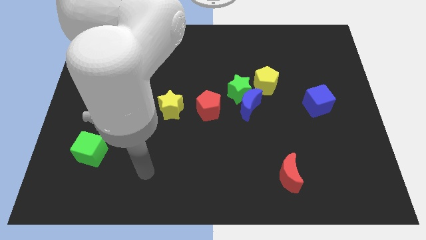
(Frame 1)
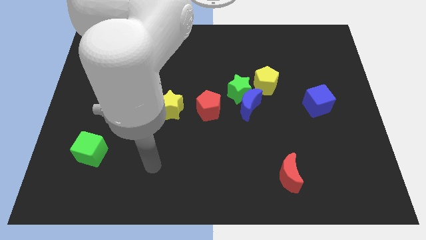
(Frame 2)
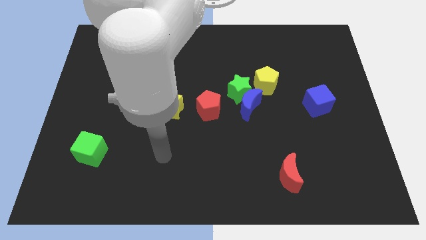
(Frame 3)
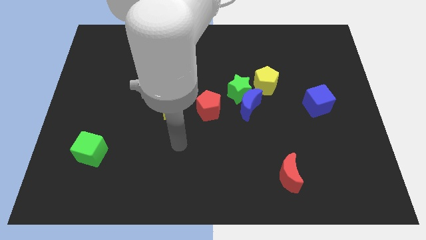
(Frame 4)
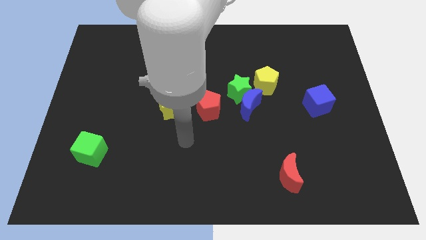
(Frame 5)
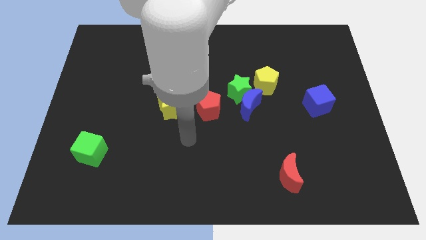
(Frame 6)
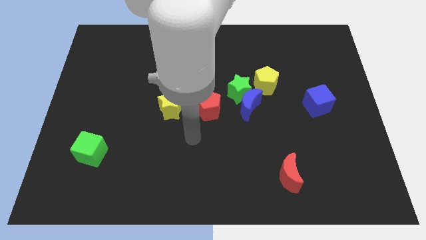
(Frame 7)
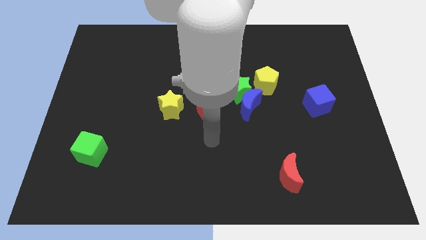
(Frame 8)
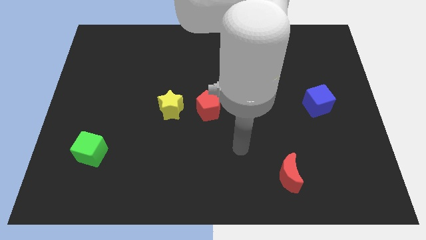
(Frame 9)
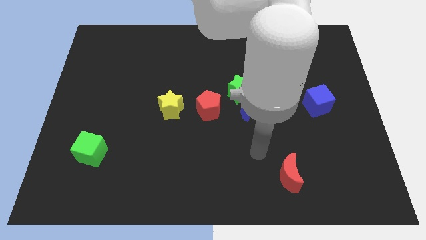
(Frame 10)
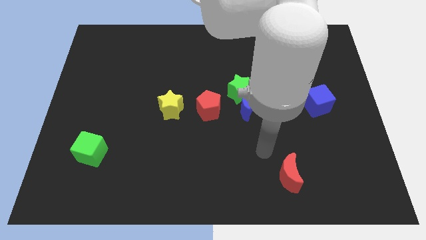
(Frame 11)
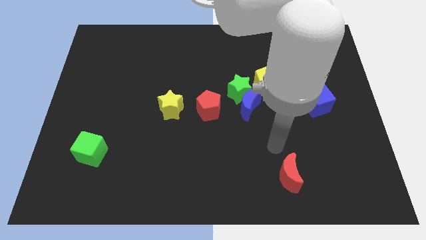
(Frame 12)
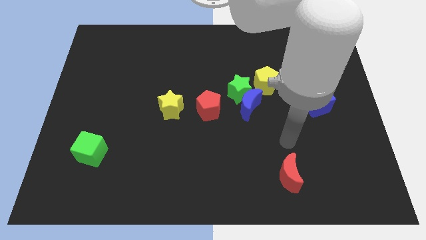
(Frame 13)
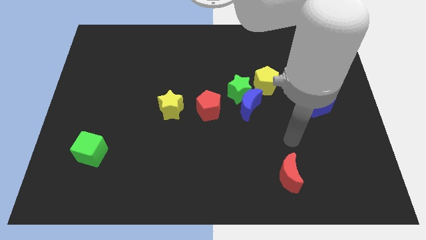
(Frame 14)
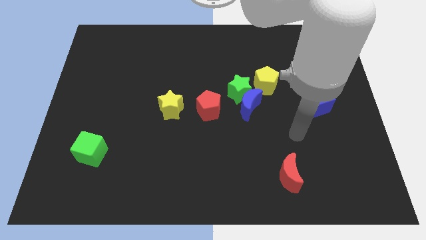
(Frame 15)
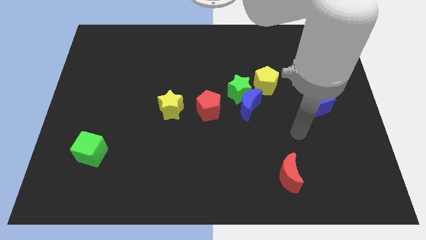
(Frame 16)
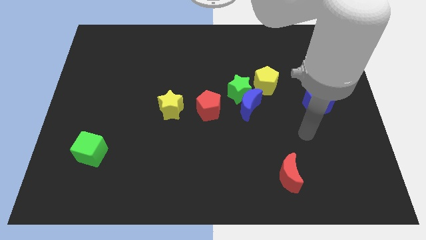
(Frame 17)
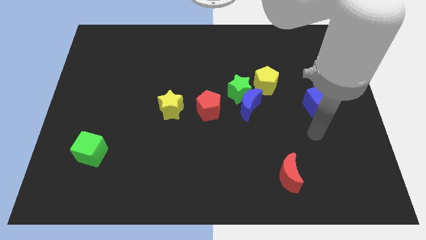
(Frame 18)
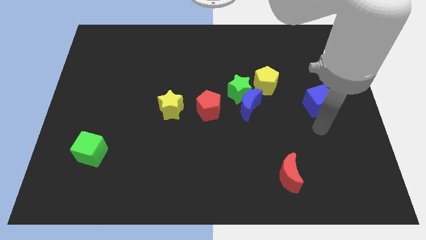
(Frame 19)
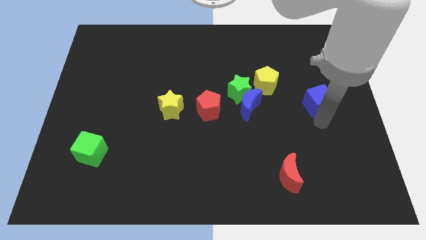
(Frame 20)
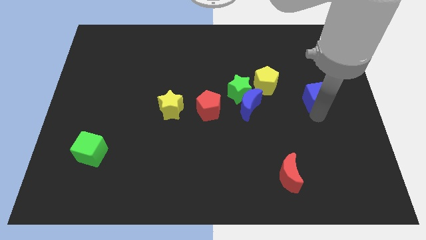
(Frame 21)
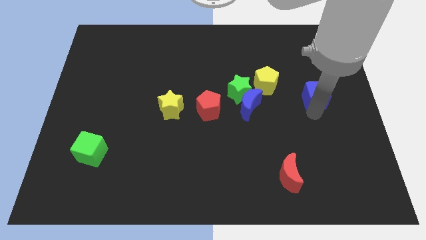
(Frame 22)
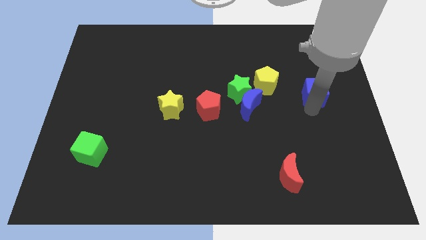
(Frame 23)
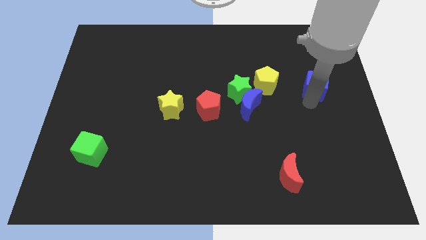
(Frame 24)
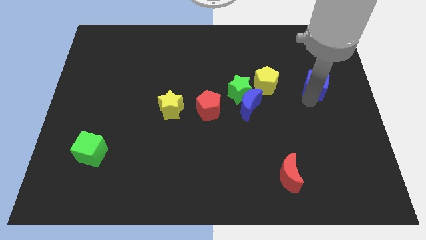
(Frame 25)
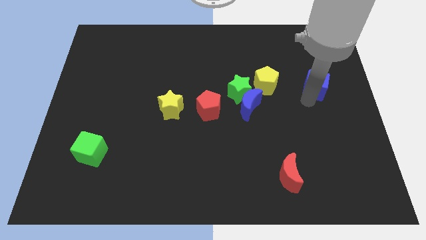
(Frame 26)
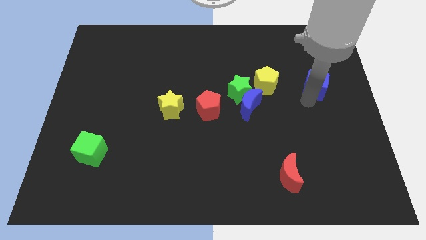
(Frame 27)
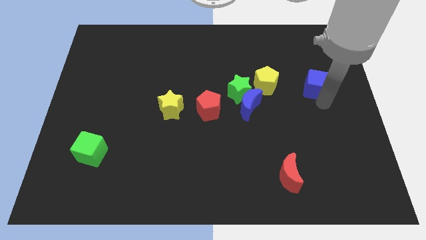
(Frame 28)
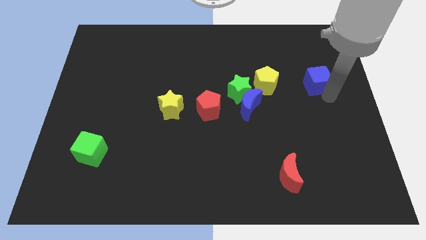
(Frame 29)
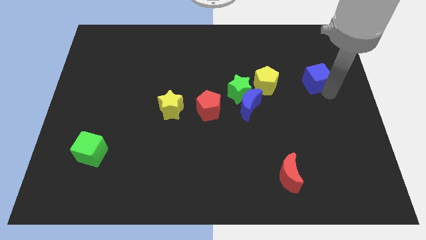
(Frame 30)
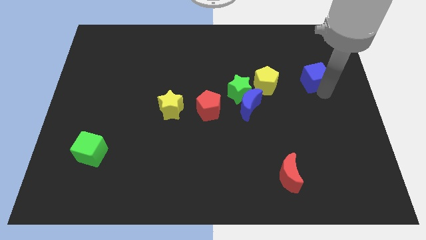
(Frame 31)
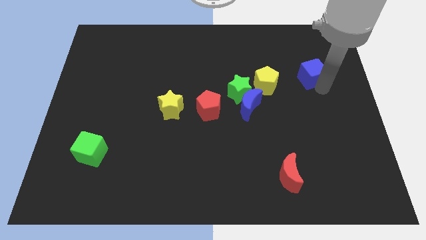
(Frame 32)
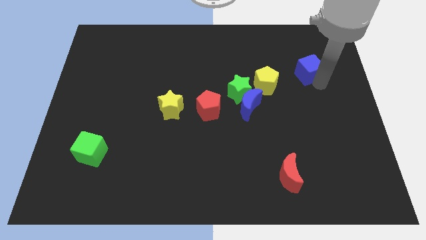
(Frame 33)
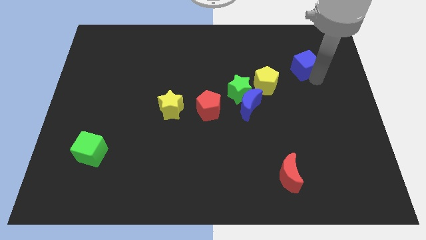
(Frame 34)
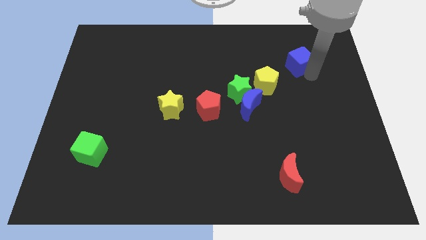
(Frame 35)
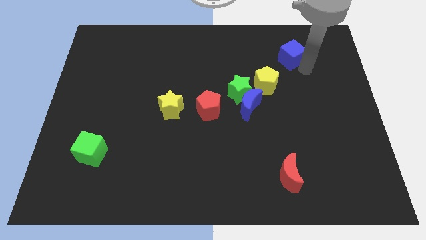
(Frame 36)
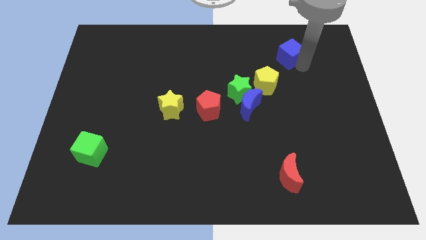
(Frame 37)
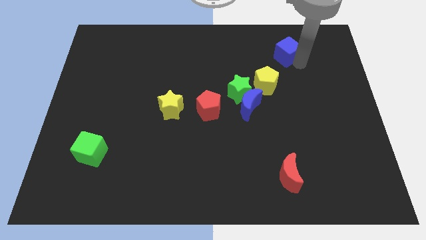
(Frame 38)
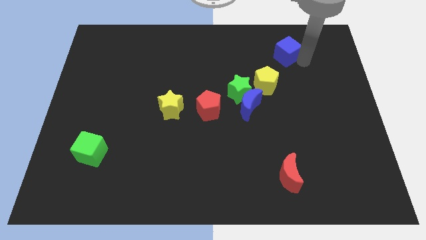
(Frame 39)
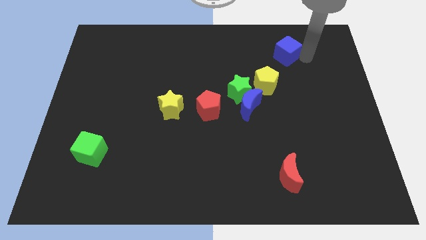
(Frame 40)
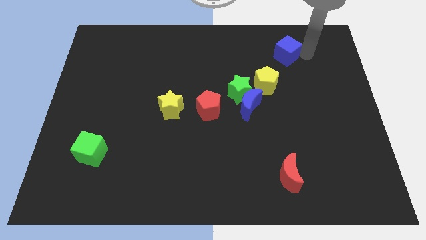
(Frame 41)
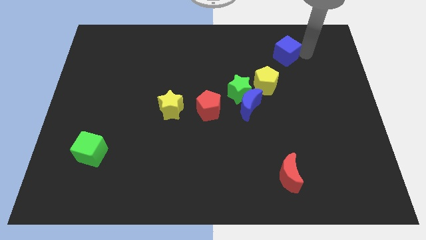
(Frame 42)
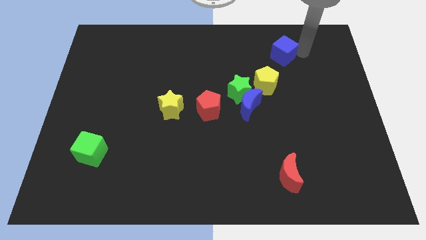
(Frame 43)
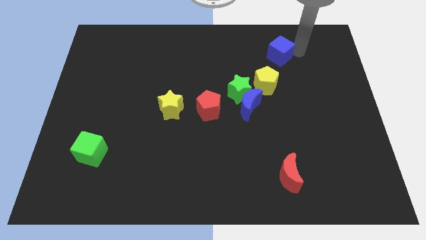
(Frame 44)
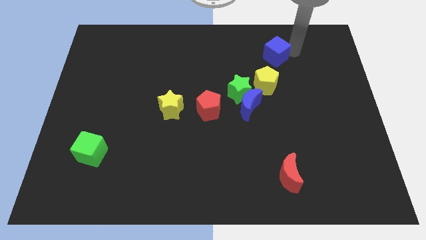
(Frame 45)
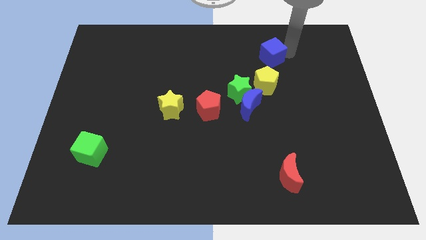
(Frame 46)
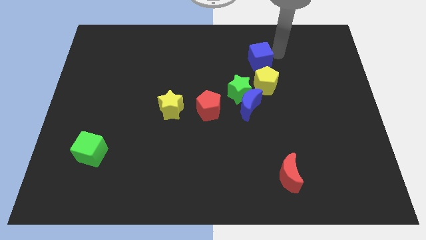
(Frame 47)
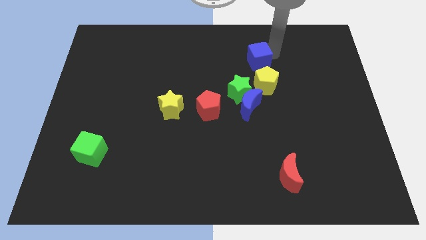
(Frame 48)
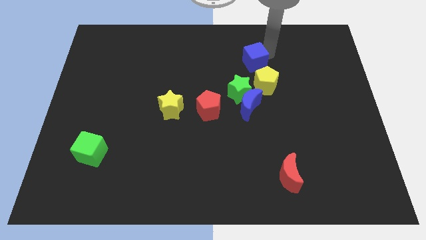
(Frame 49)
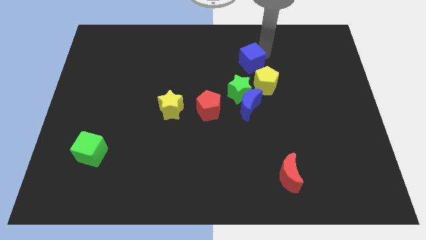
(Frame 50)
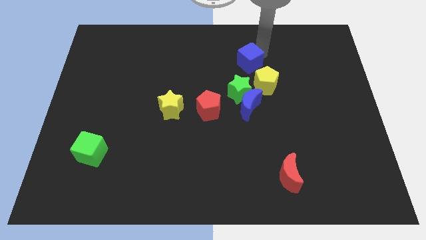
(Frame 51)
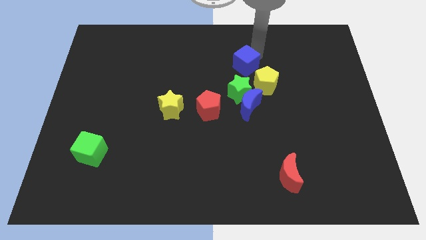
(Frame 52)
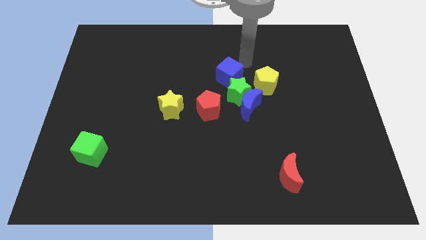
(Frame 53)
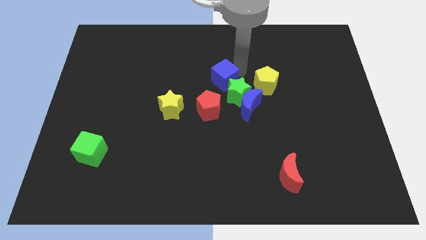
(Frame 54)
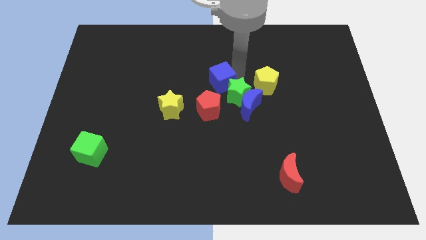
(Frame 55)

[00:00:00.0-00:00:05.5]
push the blue cube to the green star

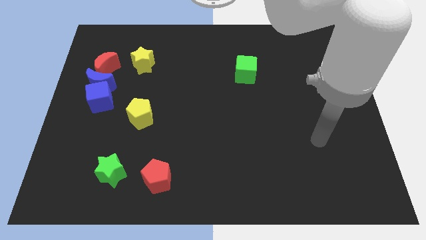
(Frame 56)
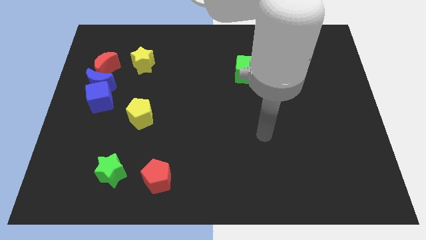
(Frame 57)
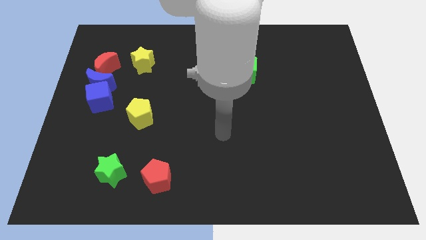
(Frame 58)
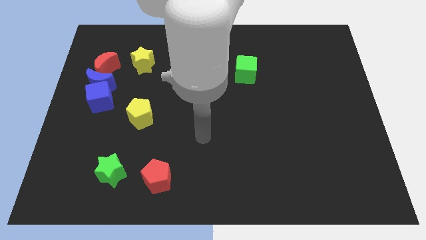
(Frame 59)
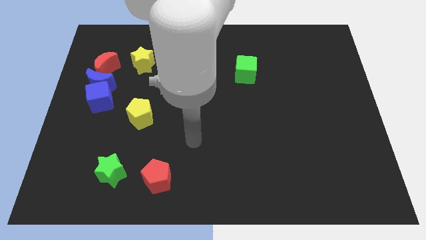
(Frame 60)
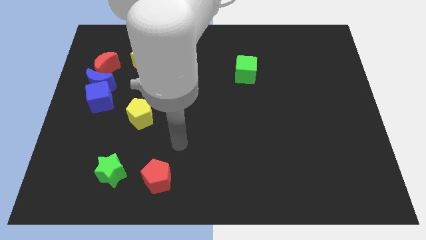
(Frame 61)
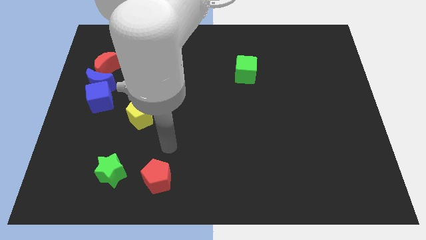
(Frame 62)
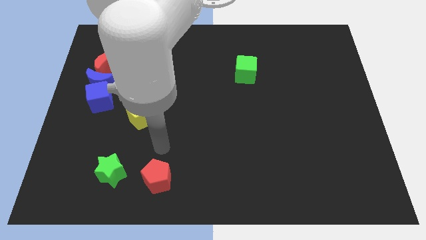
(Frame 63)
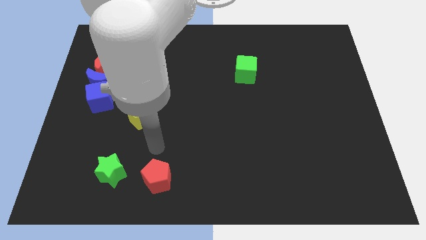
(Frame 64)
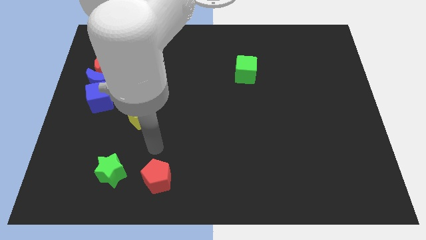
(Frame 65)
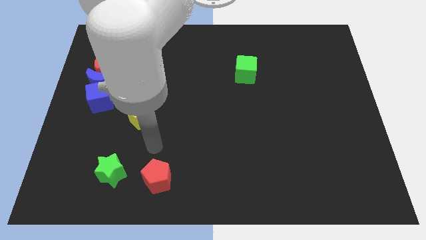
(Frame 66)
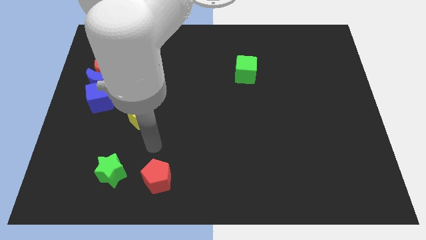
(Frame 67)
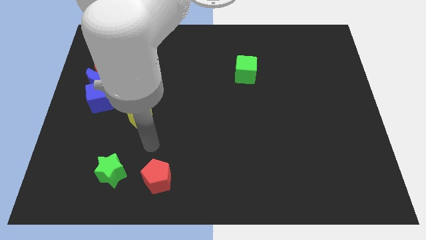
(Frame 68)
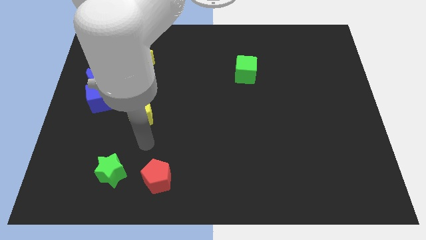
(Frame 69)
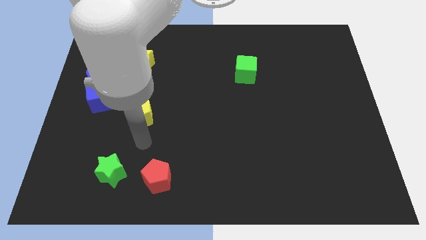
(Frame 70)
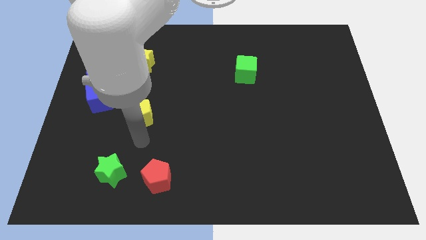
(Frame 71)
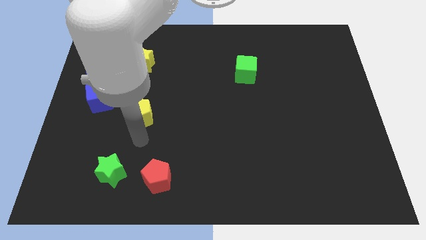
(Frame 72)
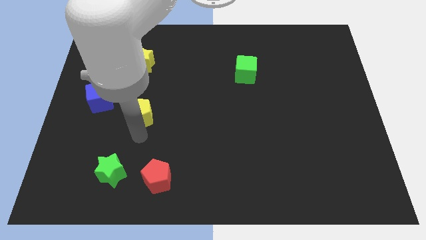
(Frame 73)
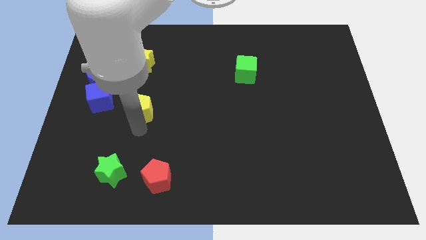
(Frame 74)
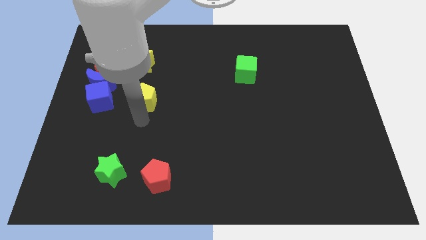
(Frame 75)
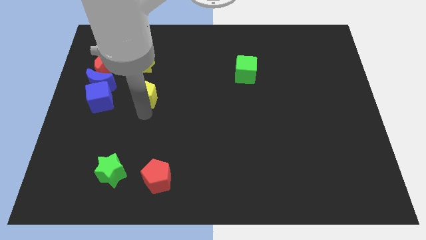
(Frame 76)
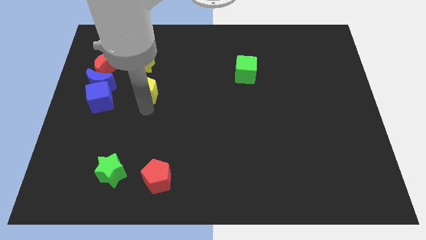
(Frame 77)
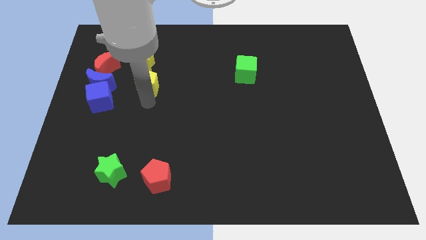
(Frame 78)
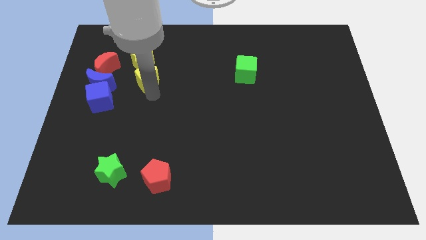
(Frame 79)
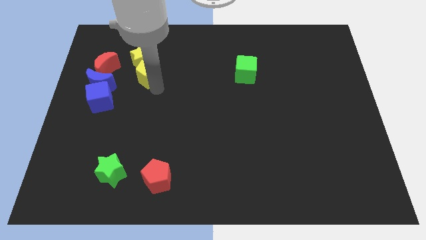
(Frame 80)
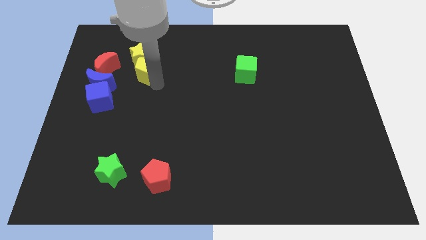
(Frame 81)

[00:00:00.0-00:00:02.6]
push the yellow pentagon close to the yellow star
